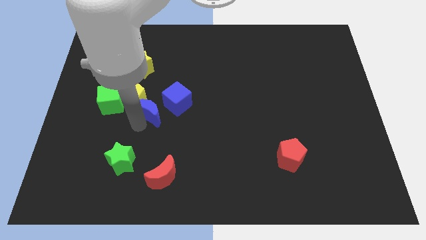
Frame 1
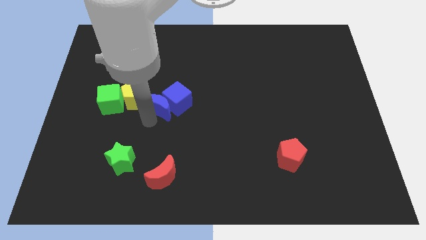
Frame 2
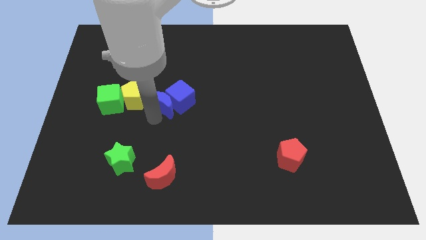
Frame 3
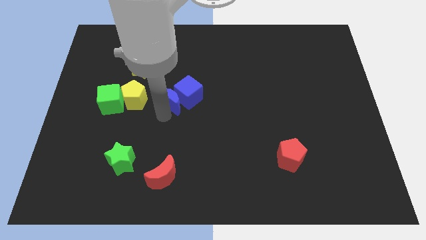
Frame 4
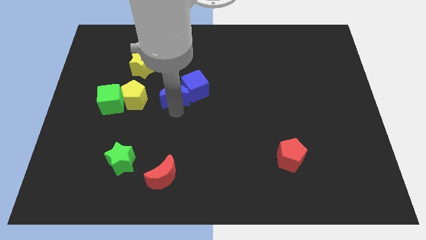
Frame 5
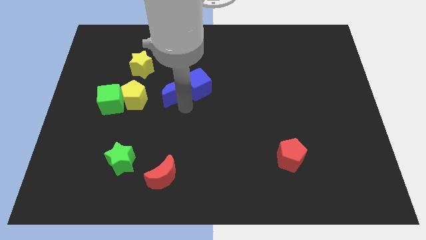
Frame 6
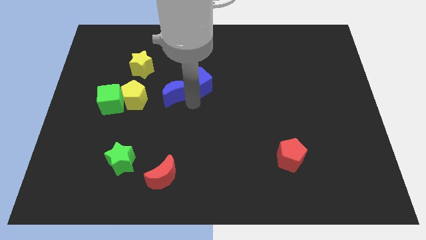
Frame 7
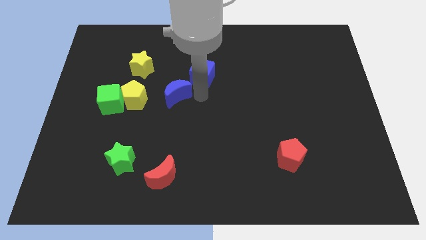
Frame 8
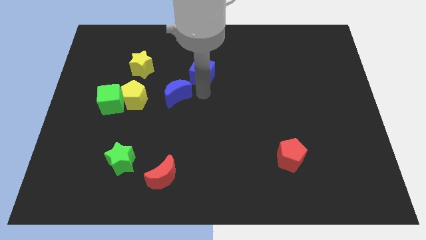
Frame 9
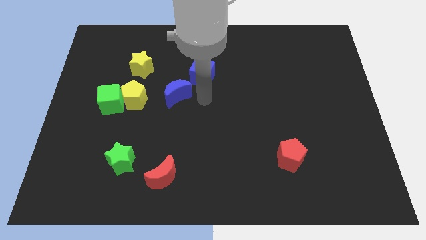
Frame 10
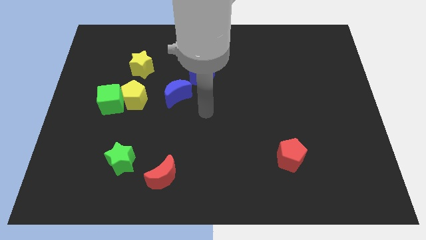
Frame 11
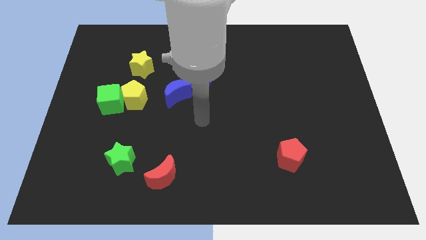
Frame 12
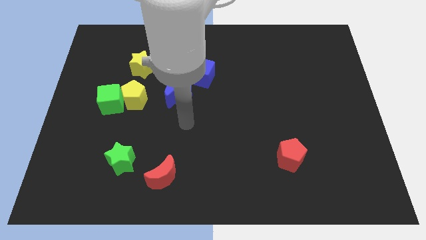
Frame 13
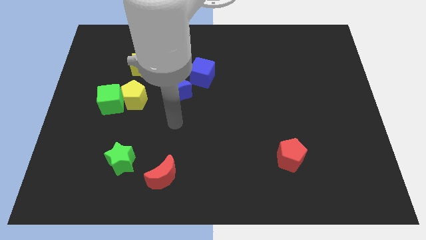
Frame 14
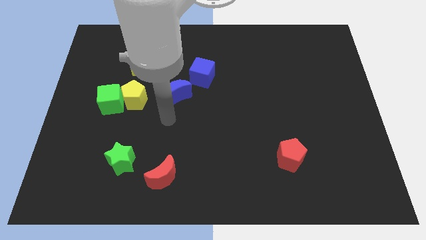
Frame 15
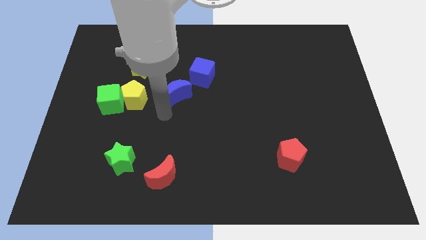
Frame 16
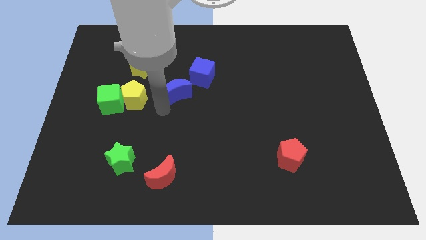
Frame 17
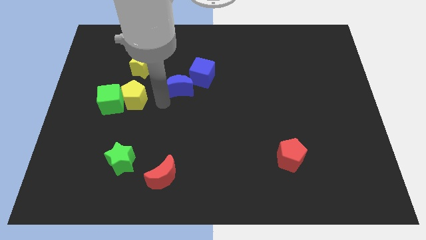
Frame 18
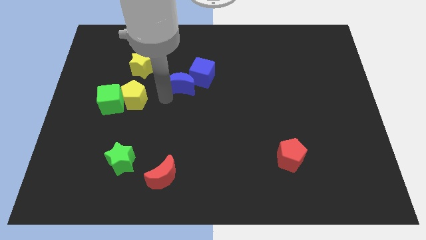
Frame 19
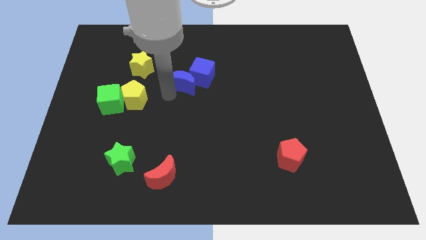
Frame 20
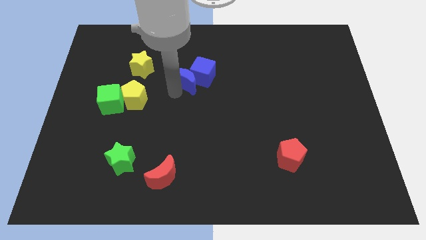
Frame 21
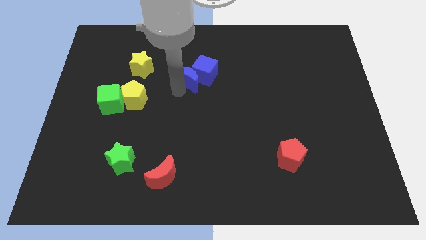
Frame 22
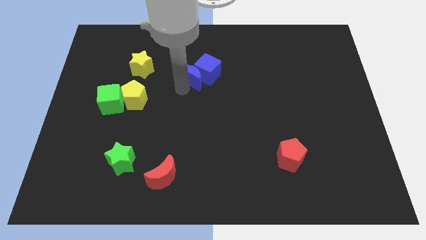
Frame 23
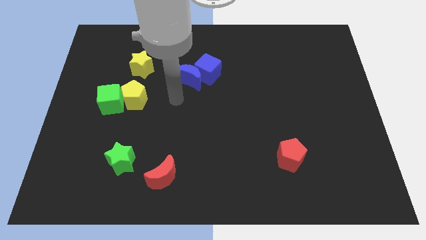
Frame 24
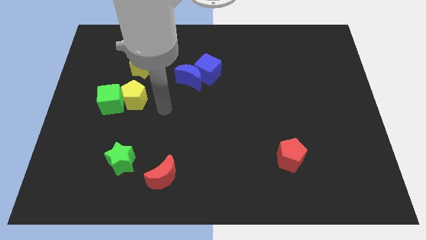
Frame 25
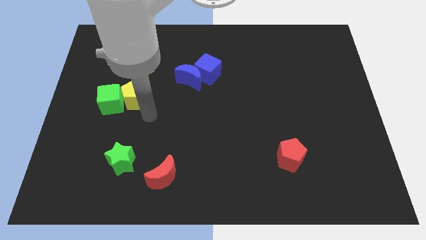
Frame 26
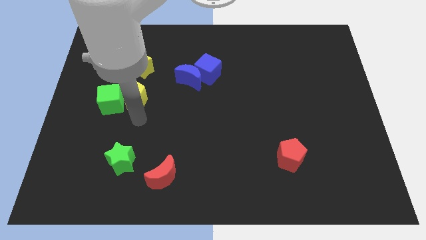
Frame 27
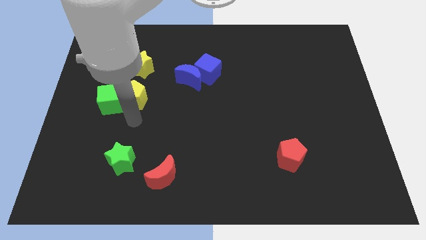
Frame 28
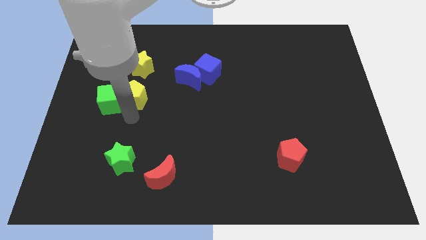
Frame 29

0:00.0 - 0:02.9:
push the blue crescent along with the blue cube to the center of the board

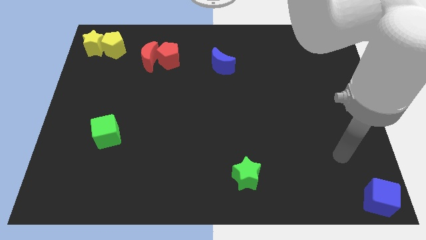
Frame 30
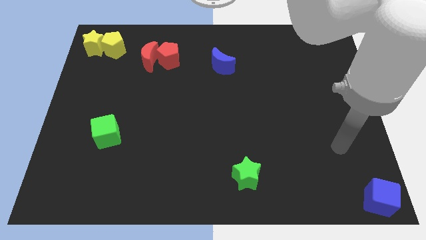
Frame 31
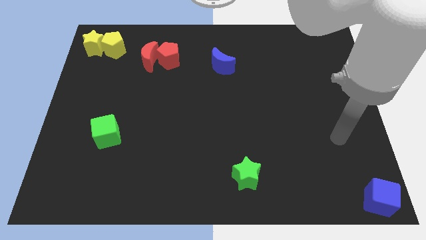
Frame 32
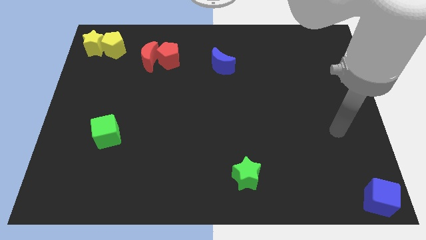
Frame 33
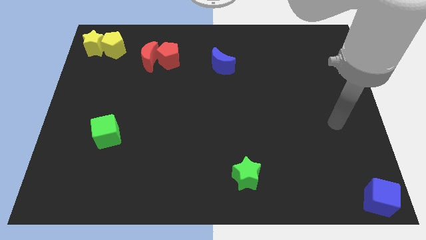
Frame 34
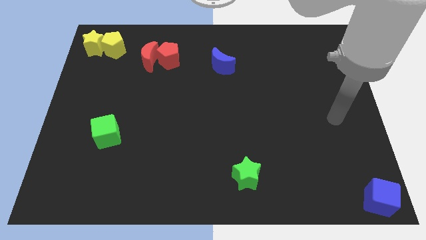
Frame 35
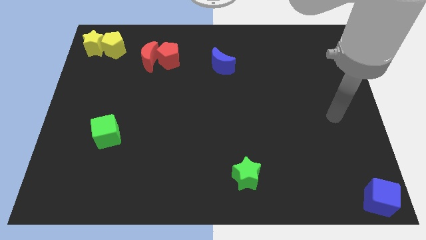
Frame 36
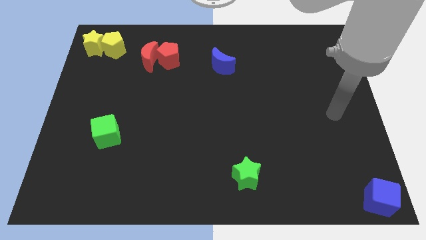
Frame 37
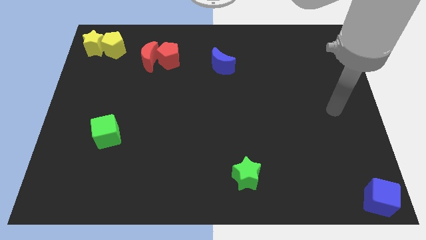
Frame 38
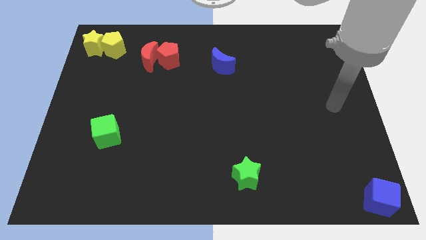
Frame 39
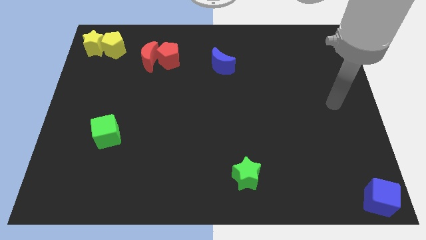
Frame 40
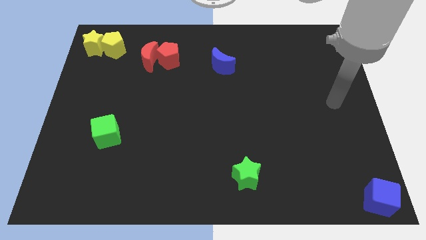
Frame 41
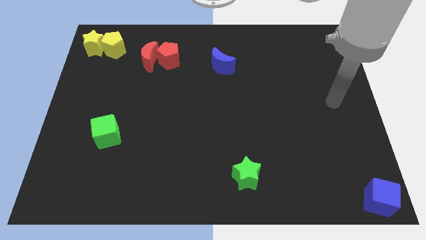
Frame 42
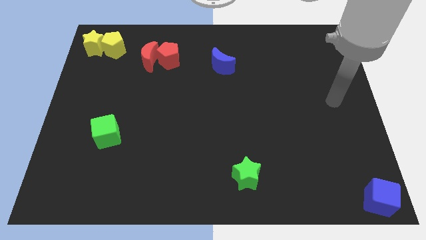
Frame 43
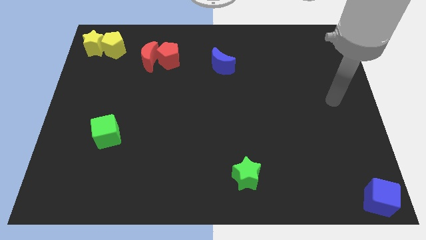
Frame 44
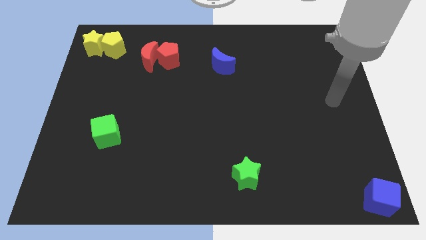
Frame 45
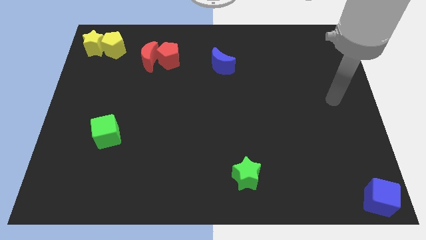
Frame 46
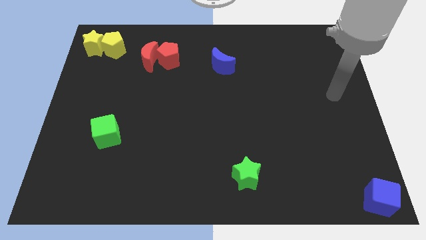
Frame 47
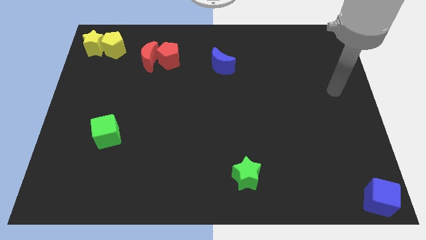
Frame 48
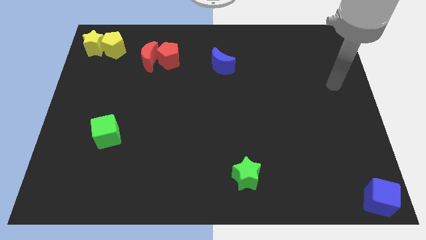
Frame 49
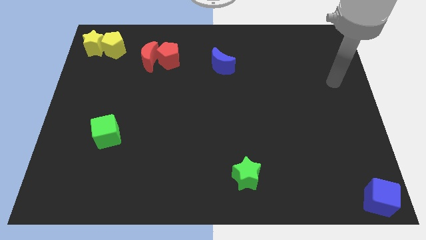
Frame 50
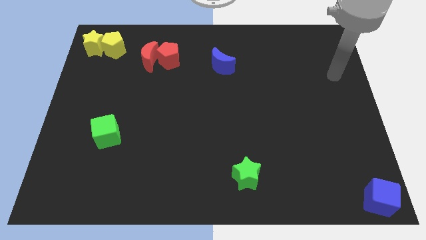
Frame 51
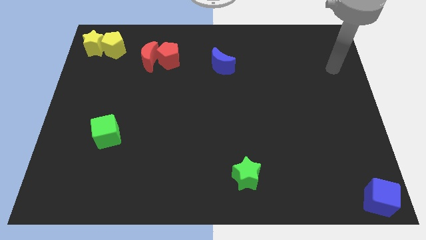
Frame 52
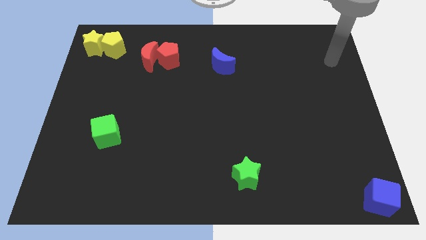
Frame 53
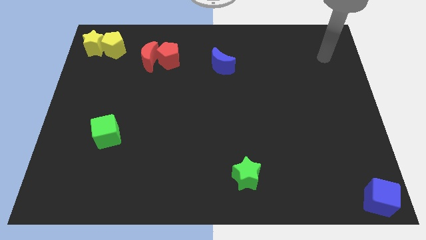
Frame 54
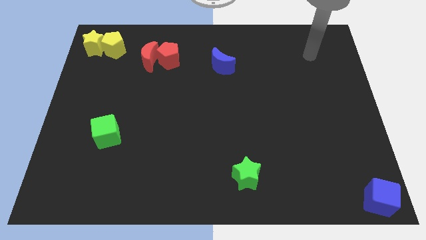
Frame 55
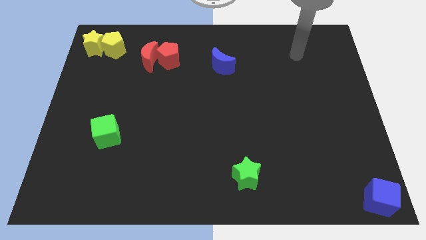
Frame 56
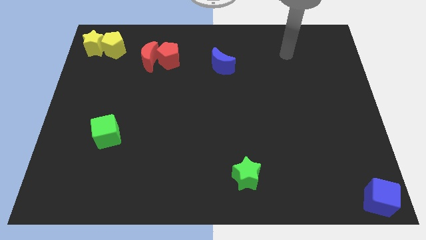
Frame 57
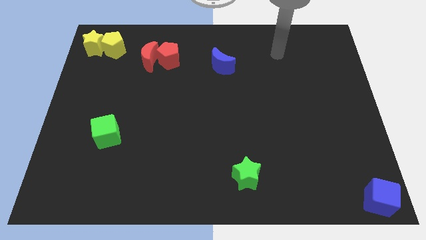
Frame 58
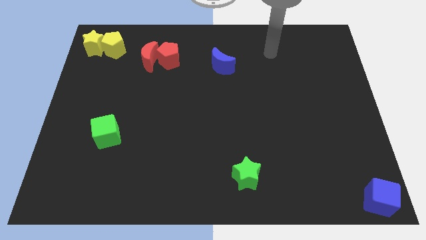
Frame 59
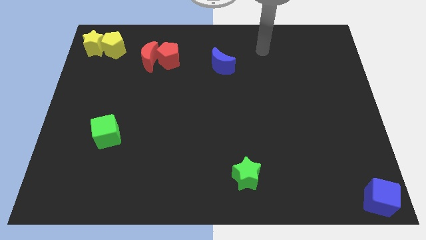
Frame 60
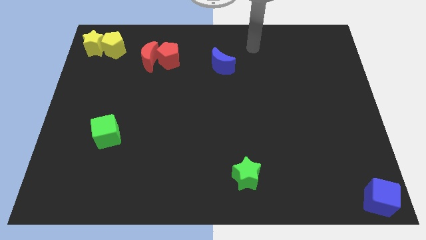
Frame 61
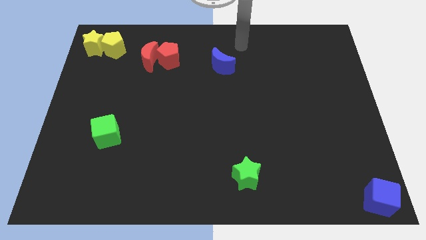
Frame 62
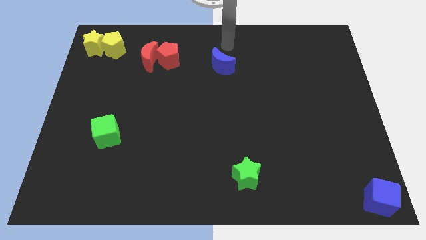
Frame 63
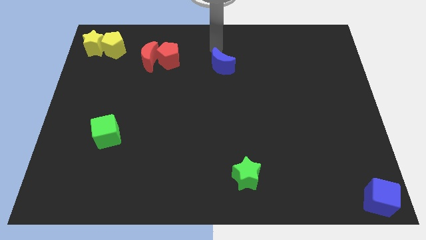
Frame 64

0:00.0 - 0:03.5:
move your arm away from blue cube

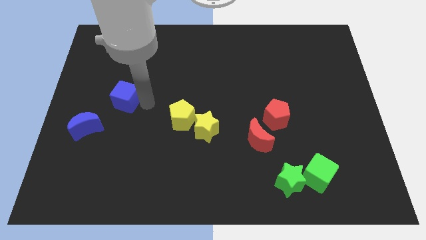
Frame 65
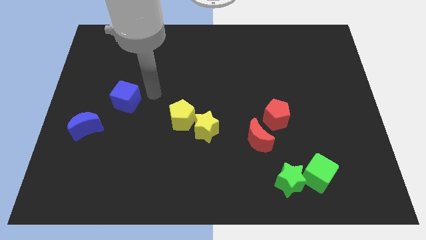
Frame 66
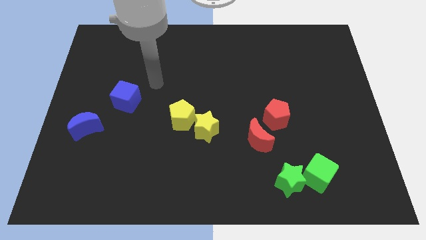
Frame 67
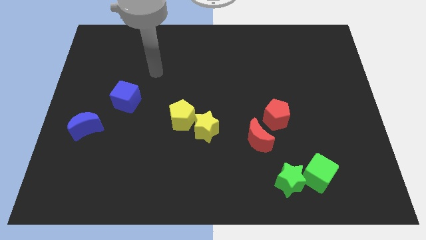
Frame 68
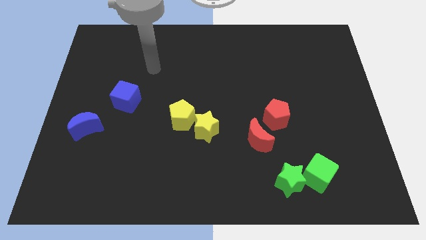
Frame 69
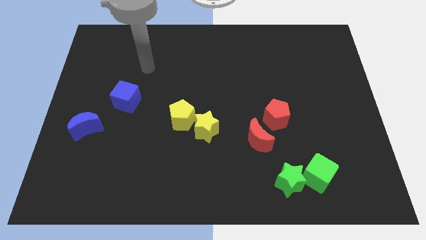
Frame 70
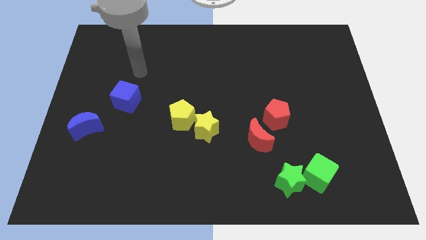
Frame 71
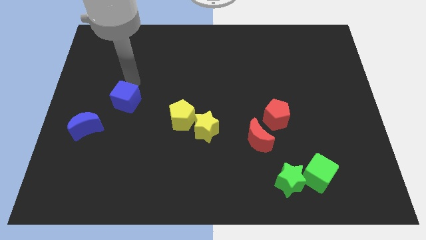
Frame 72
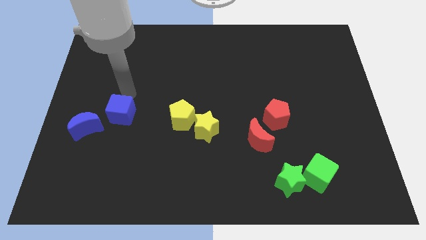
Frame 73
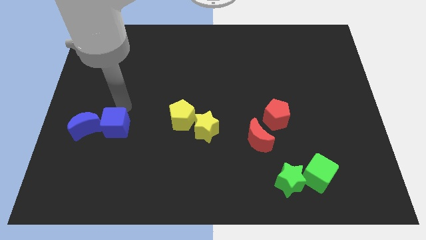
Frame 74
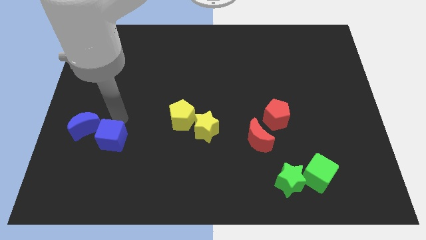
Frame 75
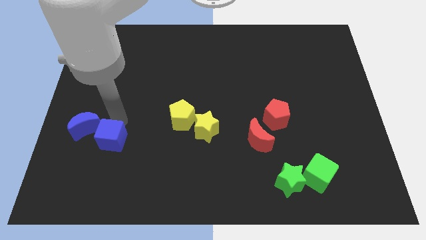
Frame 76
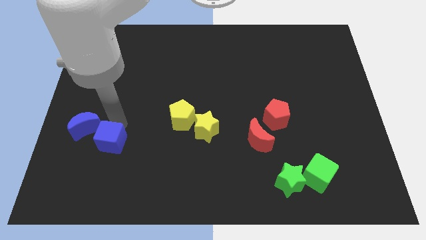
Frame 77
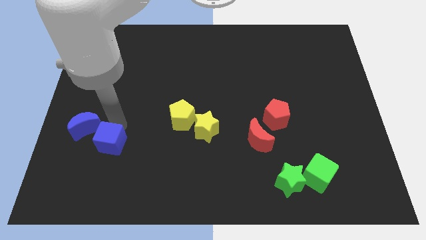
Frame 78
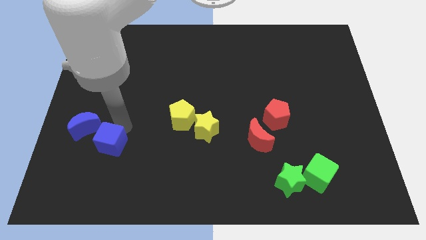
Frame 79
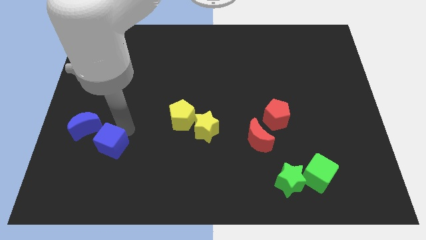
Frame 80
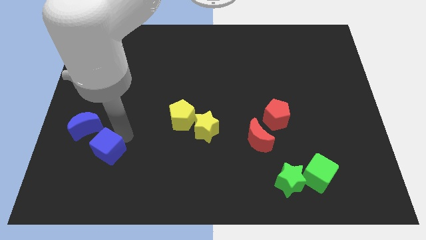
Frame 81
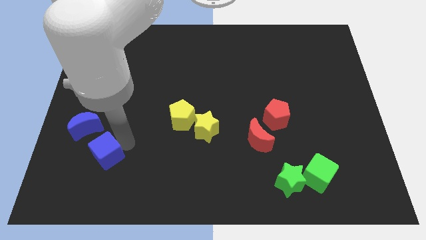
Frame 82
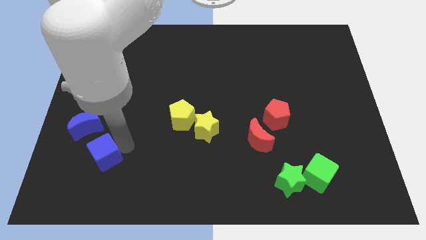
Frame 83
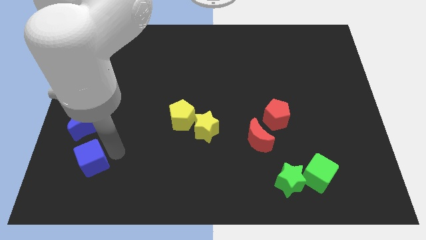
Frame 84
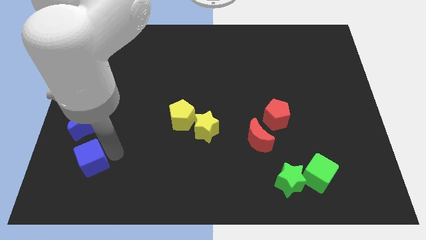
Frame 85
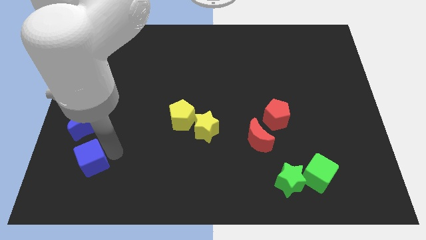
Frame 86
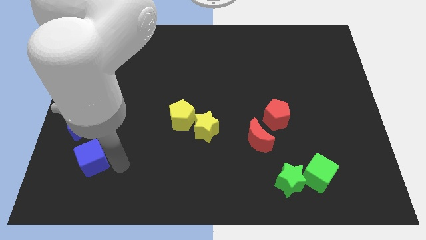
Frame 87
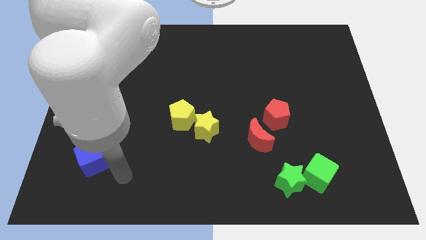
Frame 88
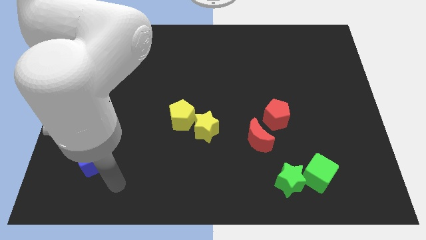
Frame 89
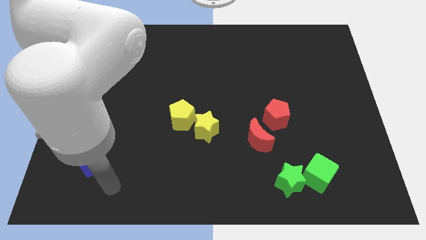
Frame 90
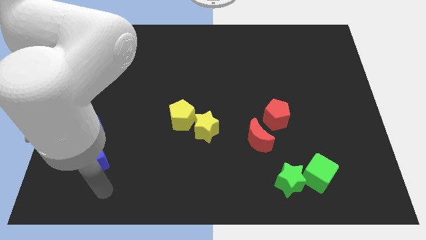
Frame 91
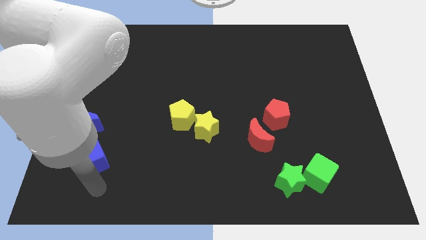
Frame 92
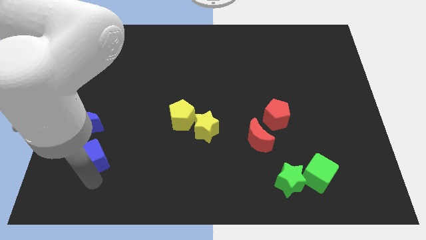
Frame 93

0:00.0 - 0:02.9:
place the blue cube below the blue moon
